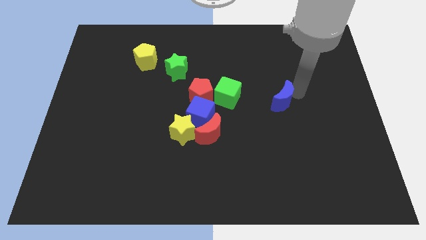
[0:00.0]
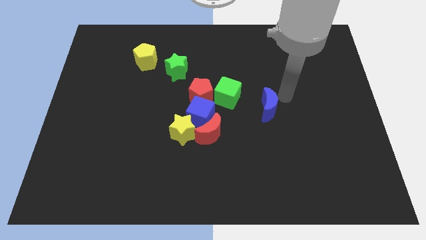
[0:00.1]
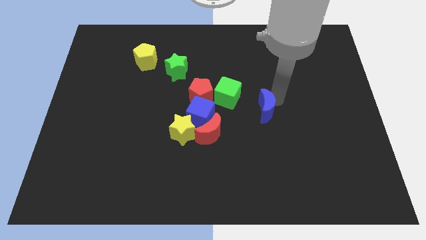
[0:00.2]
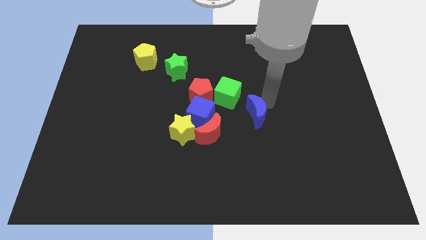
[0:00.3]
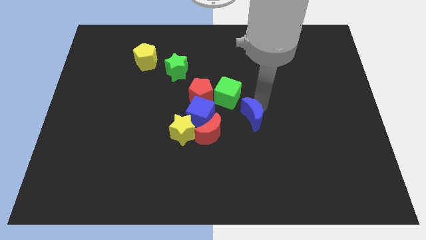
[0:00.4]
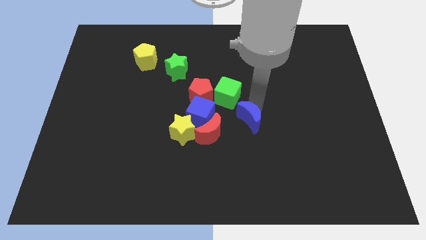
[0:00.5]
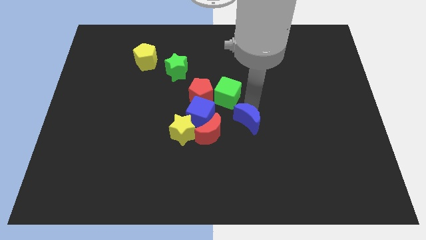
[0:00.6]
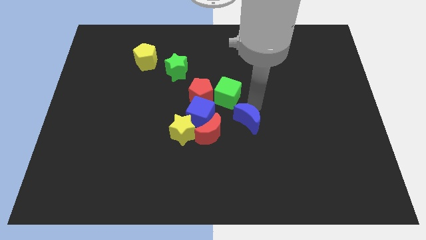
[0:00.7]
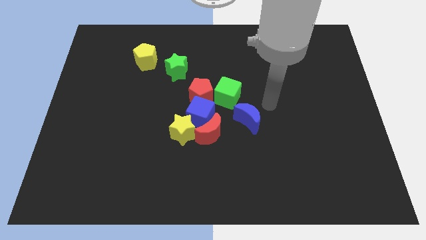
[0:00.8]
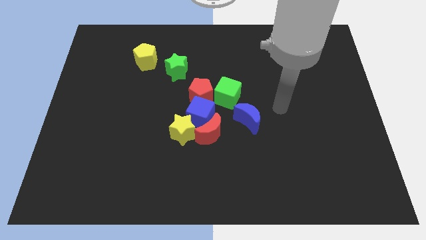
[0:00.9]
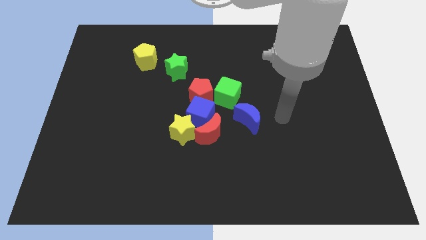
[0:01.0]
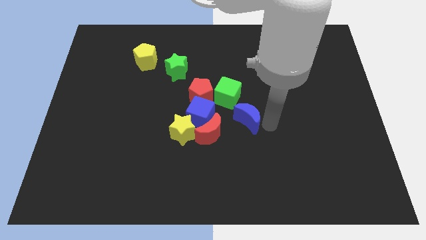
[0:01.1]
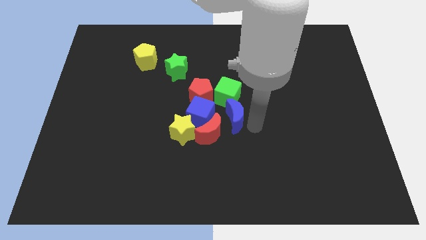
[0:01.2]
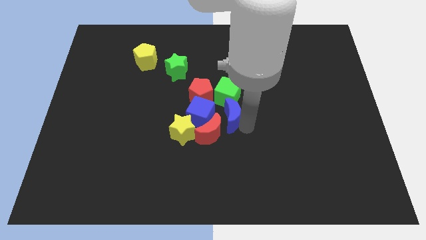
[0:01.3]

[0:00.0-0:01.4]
move the blue crescent below the green cube

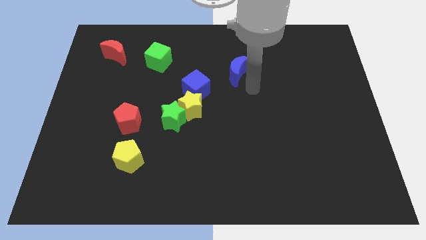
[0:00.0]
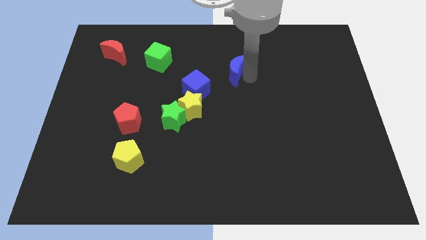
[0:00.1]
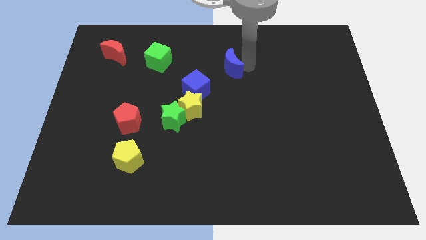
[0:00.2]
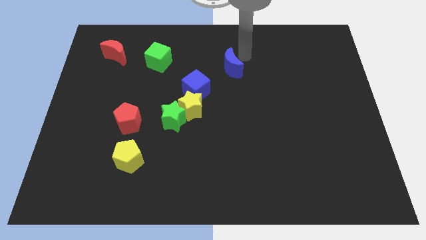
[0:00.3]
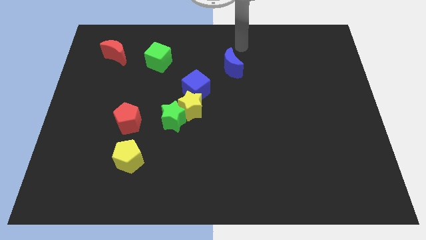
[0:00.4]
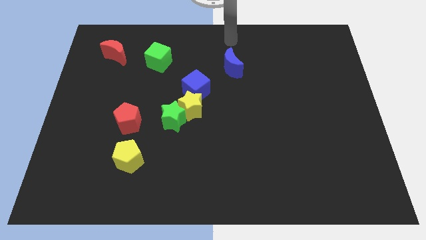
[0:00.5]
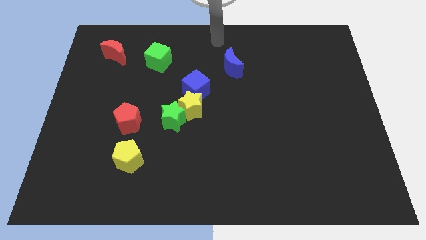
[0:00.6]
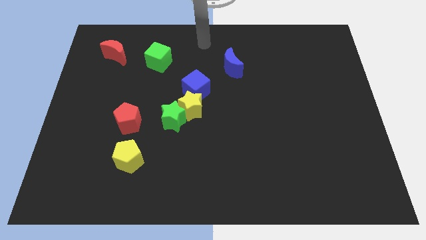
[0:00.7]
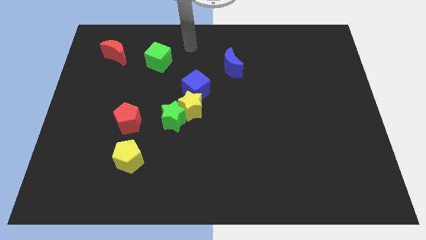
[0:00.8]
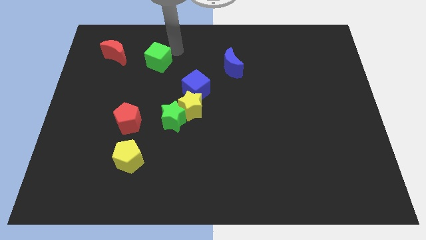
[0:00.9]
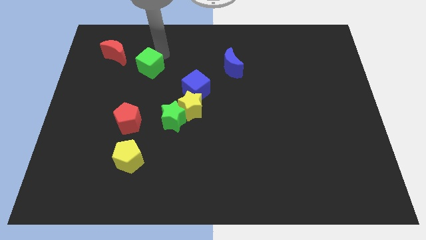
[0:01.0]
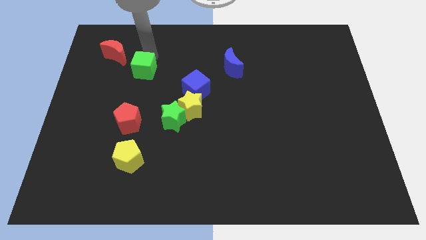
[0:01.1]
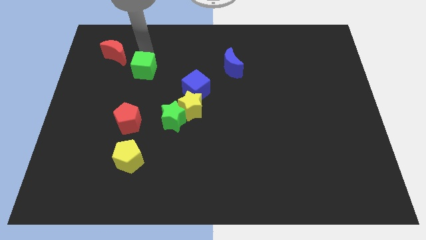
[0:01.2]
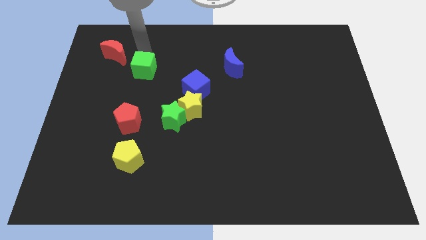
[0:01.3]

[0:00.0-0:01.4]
move your arm towards the green cube

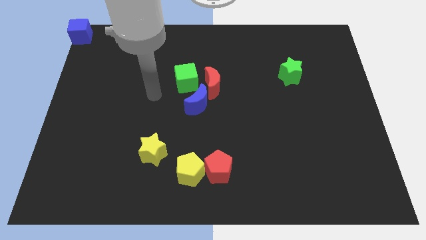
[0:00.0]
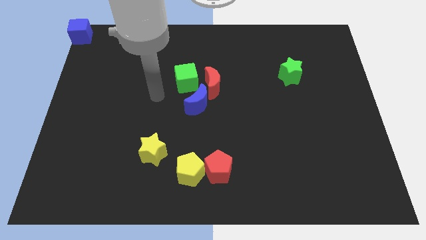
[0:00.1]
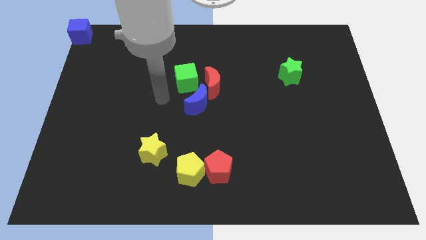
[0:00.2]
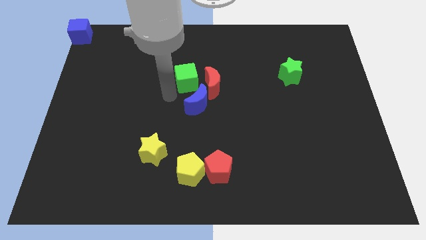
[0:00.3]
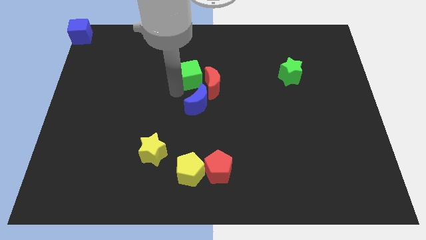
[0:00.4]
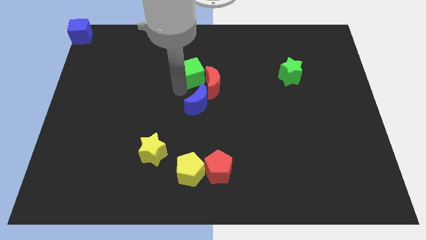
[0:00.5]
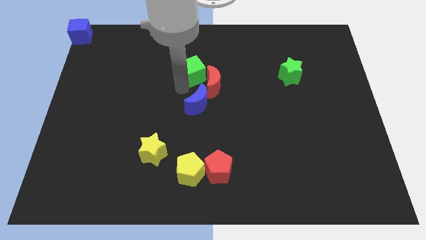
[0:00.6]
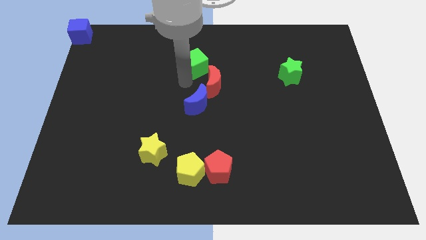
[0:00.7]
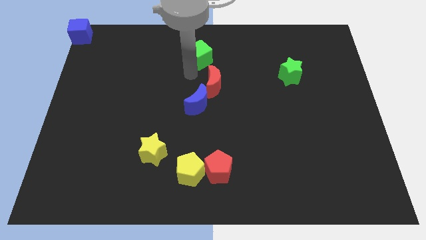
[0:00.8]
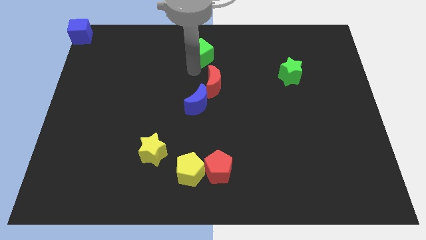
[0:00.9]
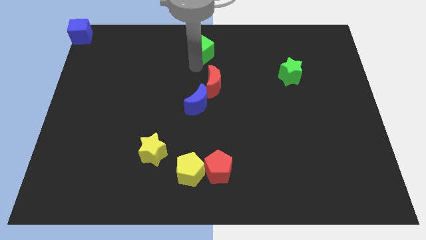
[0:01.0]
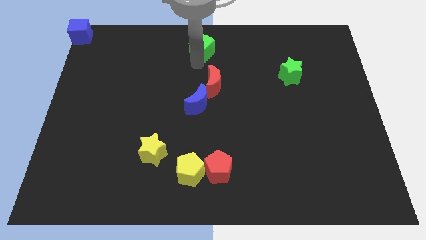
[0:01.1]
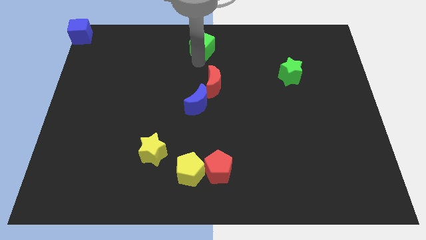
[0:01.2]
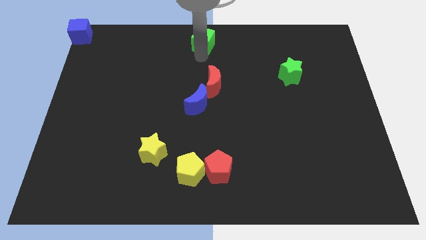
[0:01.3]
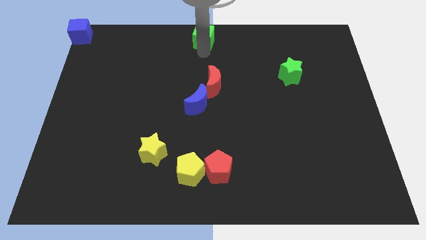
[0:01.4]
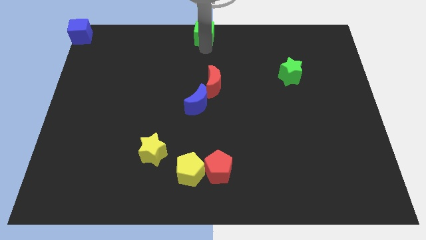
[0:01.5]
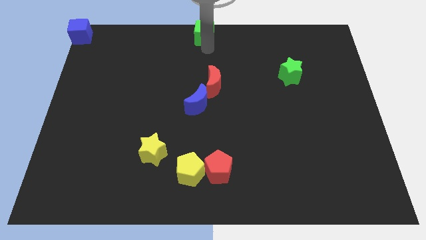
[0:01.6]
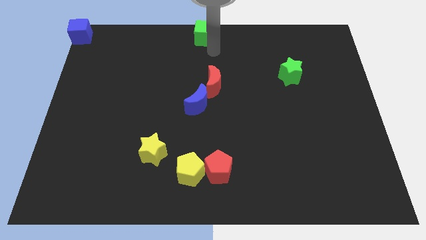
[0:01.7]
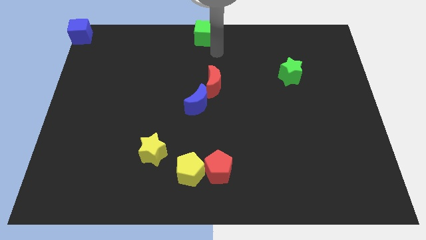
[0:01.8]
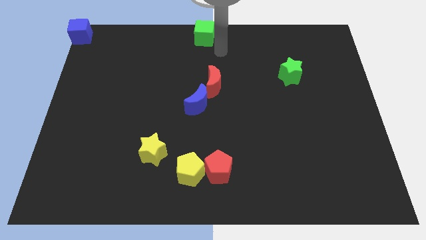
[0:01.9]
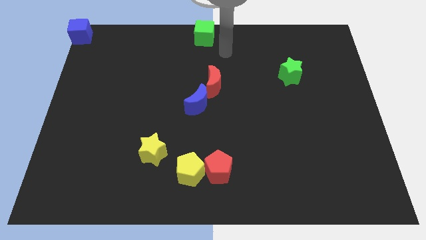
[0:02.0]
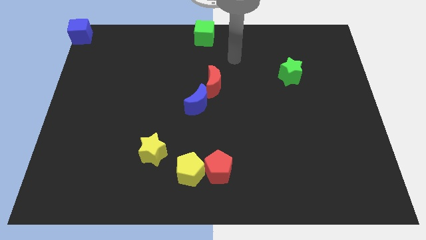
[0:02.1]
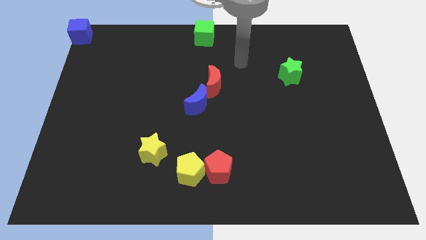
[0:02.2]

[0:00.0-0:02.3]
place the green cube vertical above red moon

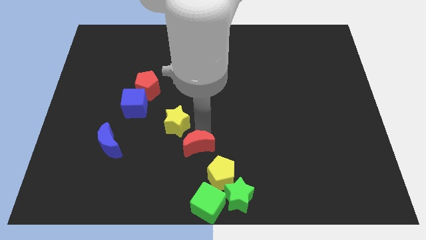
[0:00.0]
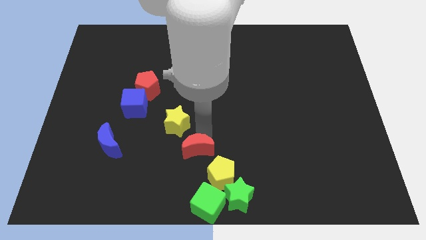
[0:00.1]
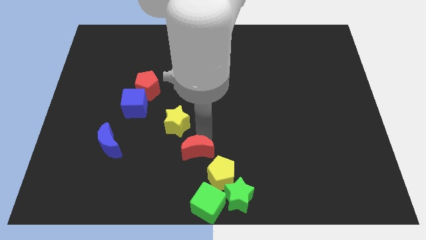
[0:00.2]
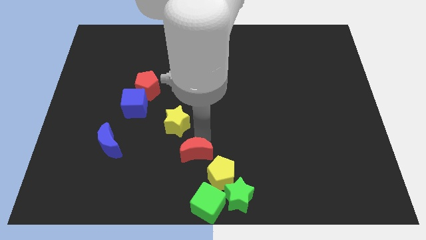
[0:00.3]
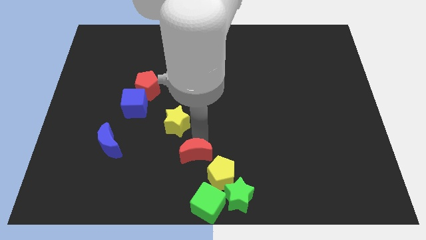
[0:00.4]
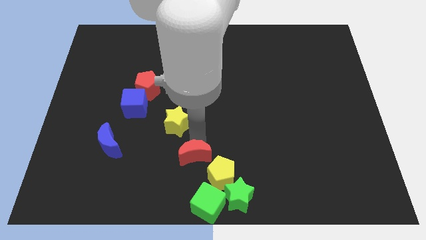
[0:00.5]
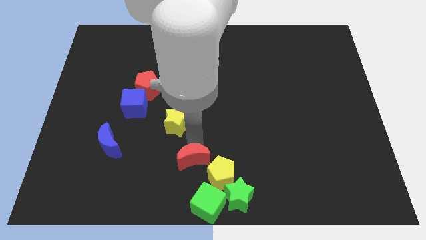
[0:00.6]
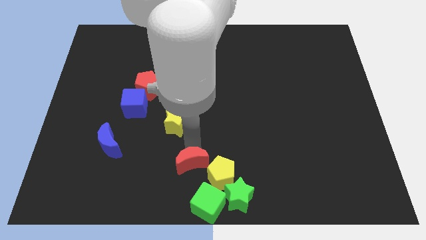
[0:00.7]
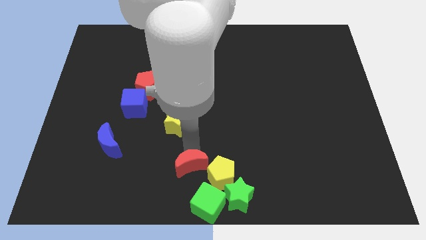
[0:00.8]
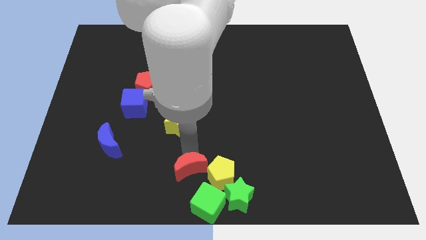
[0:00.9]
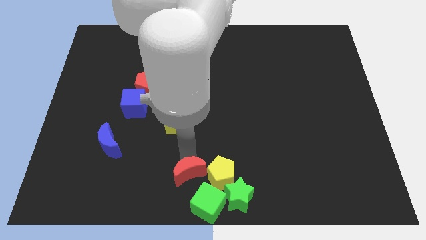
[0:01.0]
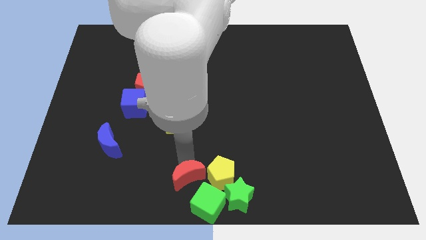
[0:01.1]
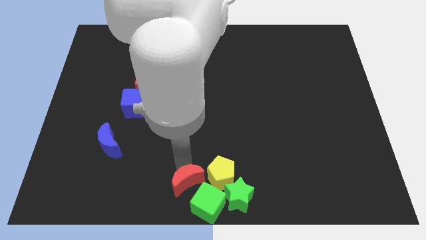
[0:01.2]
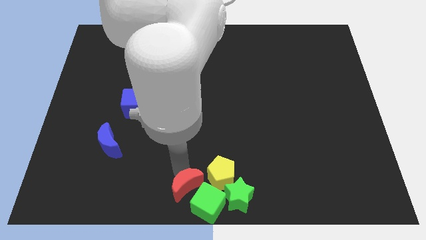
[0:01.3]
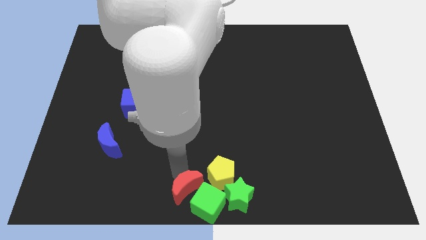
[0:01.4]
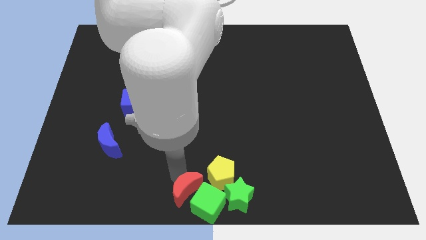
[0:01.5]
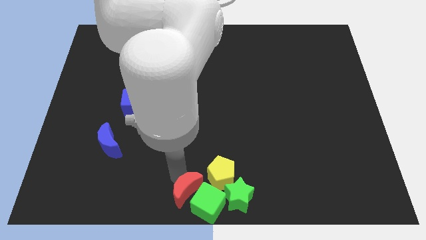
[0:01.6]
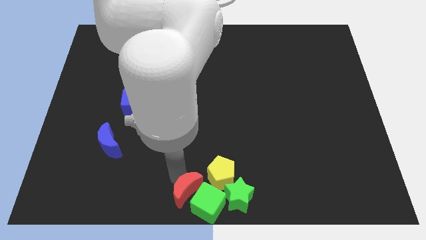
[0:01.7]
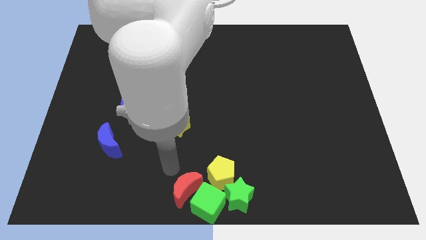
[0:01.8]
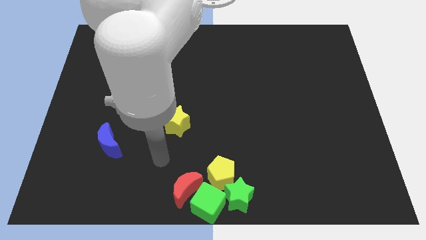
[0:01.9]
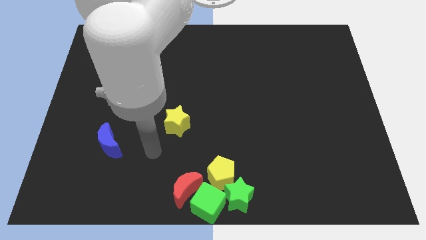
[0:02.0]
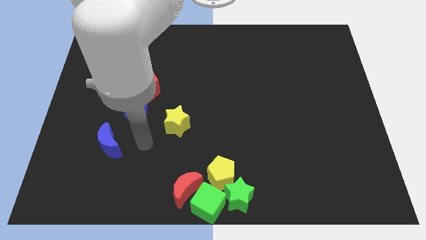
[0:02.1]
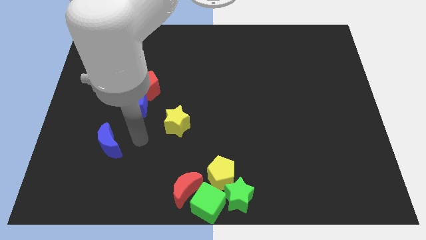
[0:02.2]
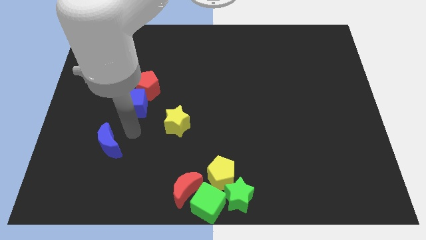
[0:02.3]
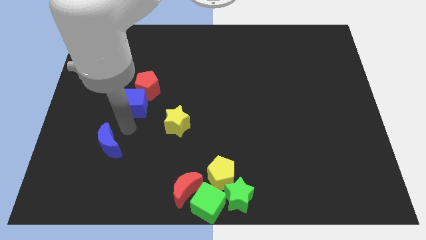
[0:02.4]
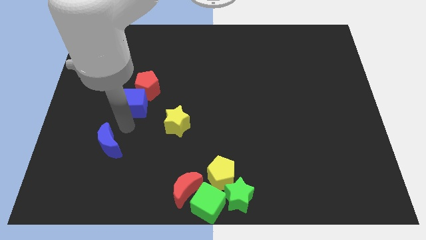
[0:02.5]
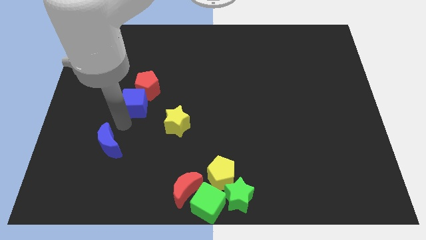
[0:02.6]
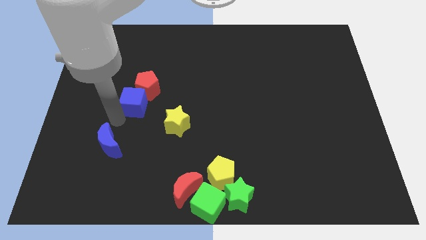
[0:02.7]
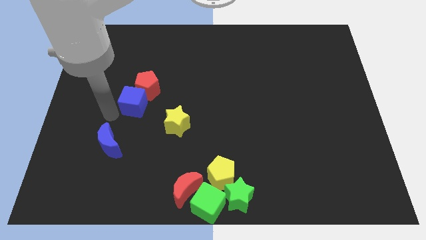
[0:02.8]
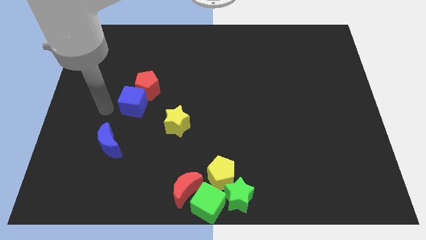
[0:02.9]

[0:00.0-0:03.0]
push the green cube to the left of the green cube from the top

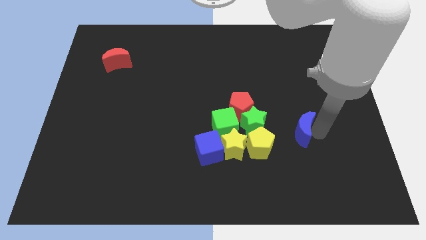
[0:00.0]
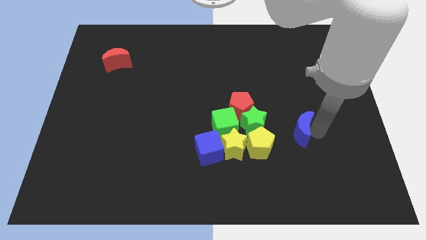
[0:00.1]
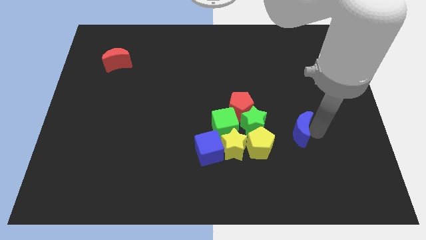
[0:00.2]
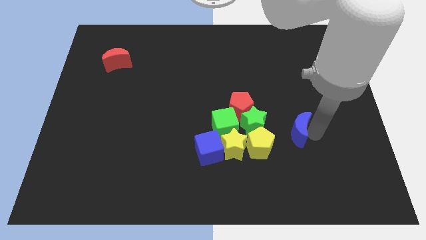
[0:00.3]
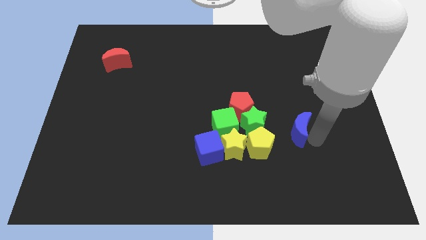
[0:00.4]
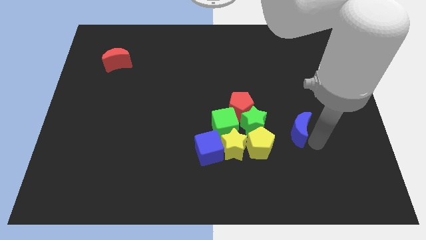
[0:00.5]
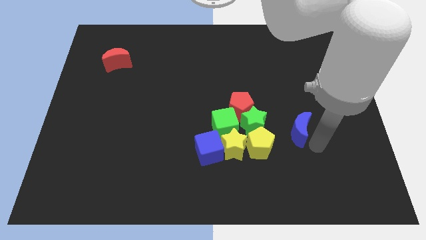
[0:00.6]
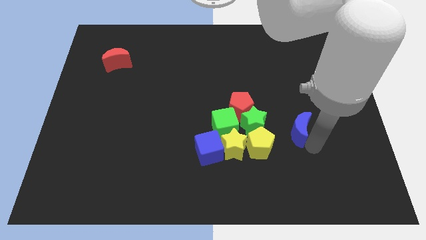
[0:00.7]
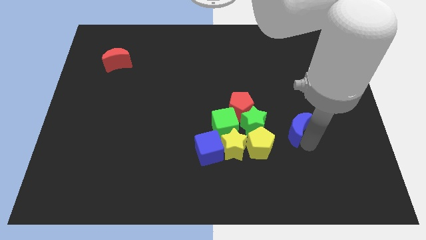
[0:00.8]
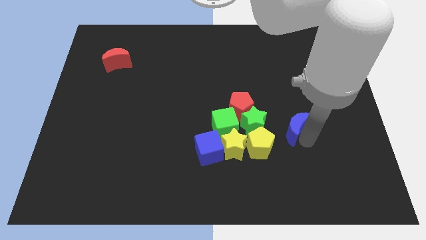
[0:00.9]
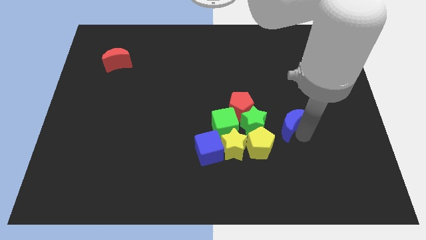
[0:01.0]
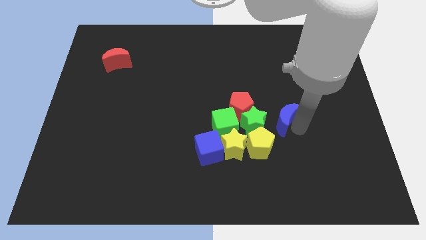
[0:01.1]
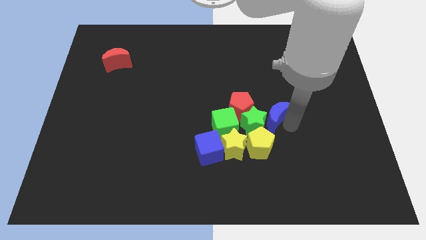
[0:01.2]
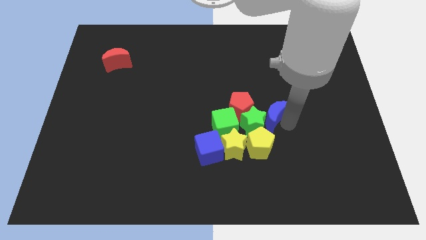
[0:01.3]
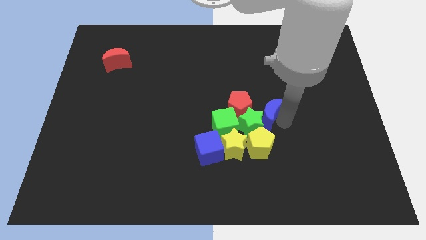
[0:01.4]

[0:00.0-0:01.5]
push the blue crescent towards green star
